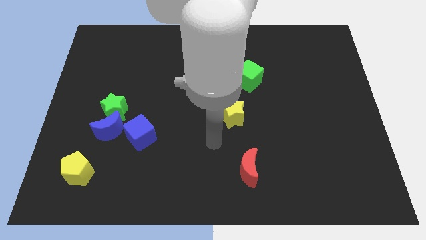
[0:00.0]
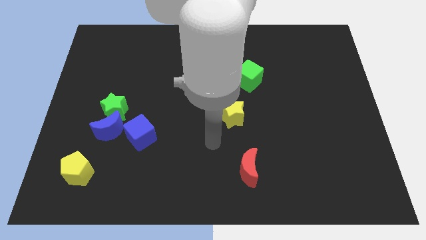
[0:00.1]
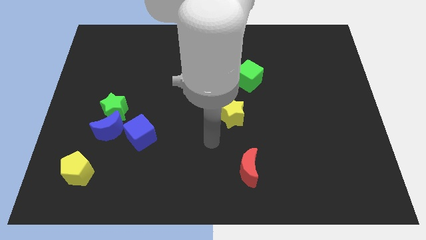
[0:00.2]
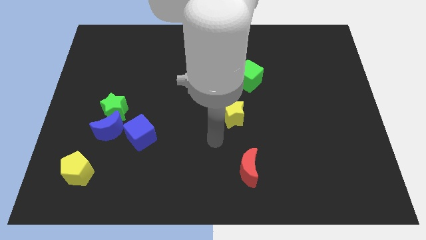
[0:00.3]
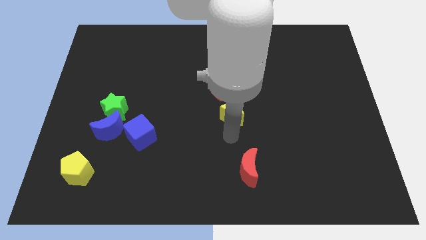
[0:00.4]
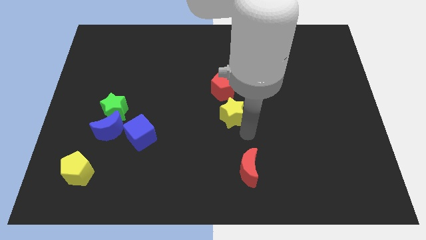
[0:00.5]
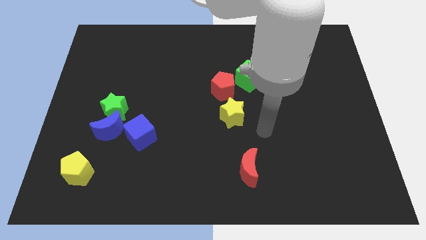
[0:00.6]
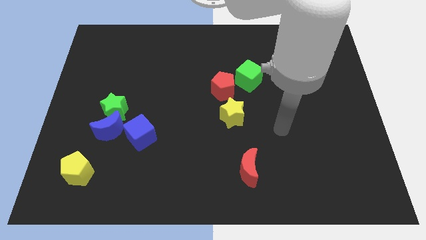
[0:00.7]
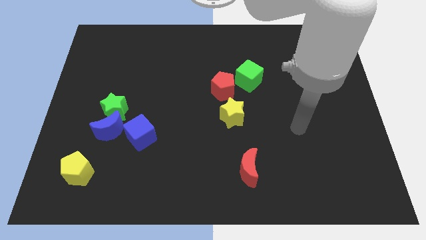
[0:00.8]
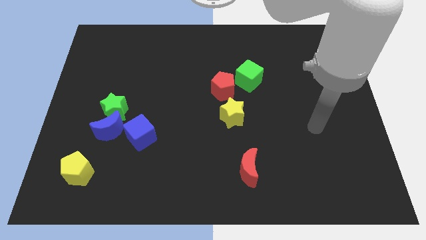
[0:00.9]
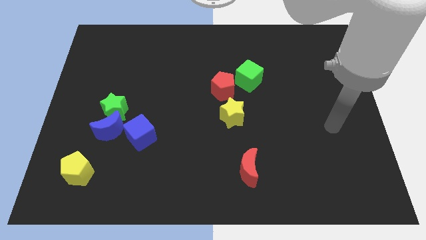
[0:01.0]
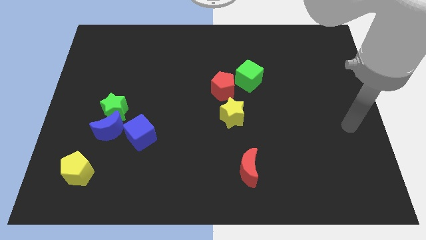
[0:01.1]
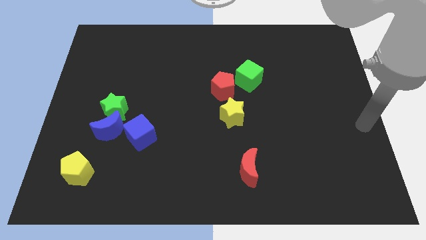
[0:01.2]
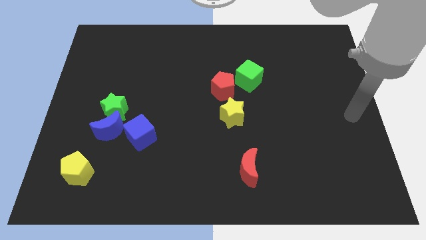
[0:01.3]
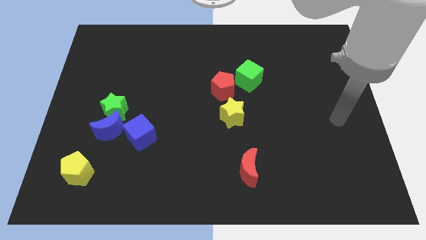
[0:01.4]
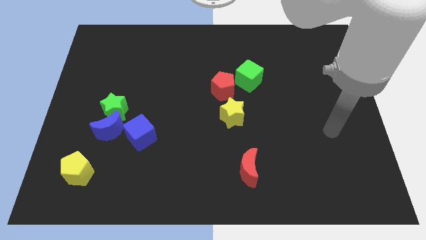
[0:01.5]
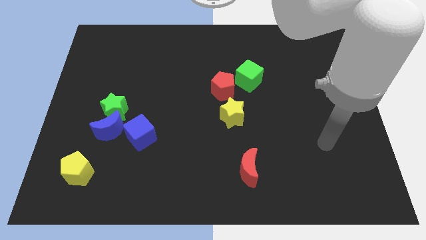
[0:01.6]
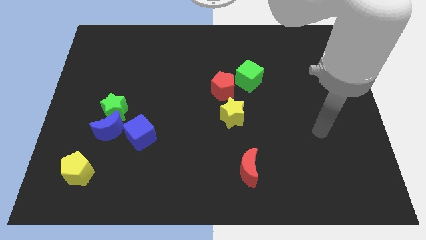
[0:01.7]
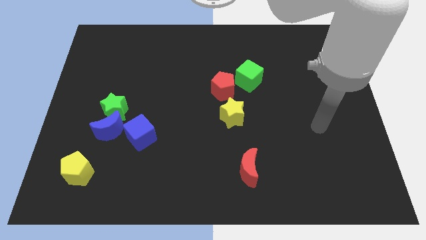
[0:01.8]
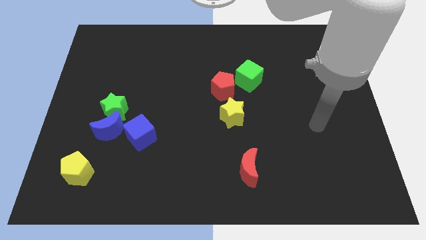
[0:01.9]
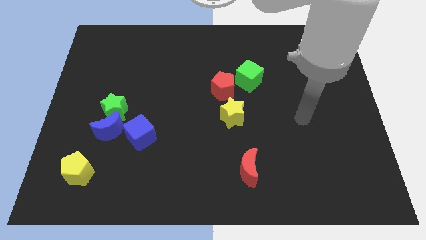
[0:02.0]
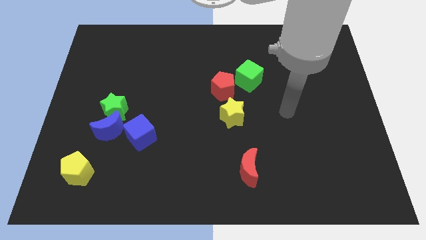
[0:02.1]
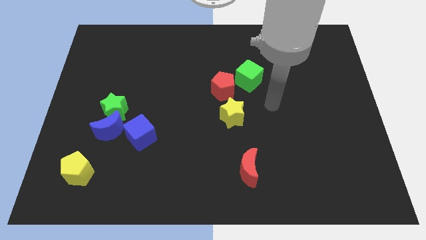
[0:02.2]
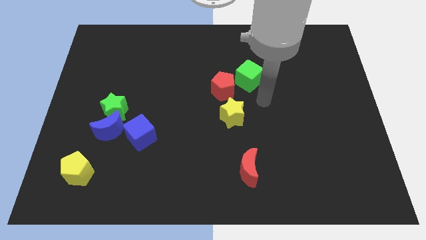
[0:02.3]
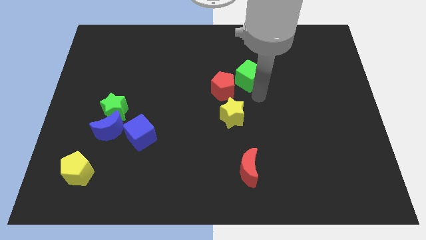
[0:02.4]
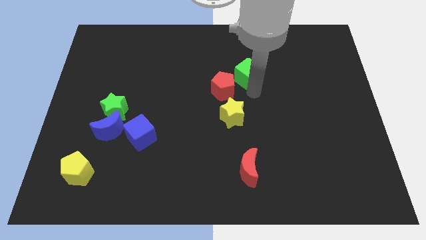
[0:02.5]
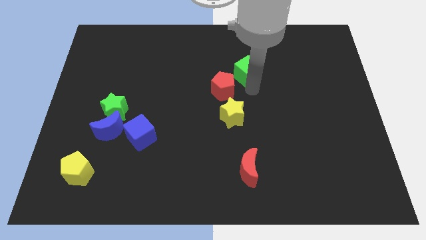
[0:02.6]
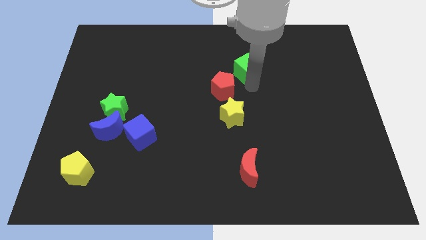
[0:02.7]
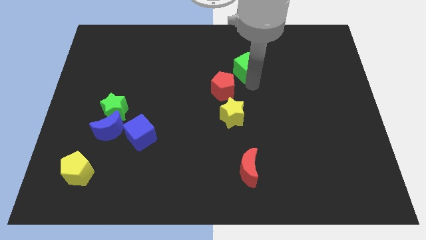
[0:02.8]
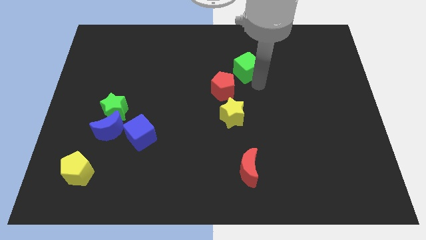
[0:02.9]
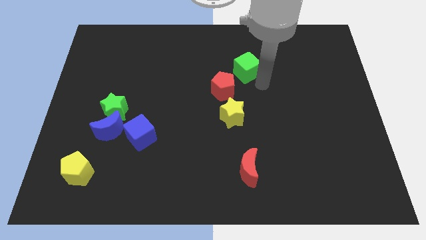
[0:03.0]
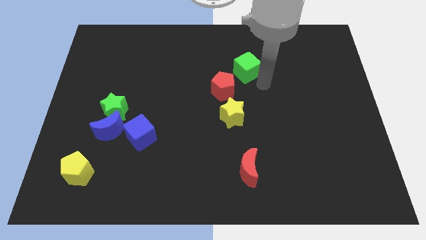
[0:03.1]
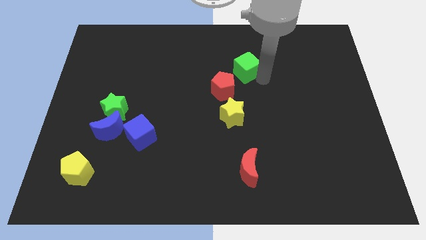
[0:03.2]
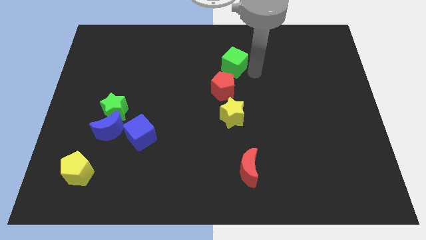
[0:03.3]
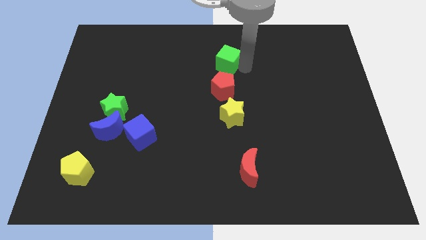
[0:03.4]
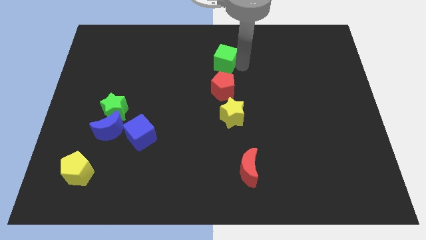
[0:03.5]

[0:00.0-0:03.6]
push green cube above red pentagon

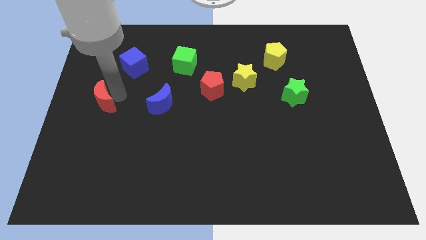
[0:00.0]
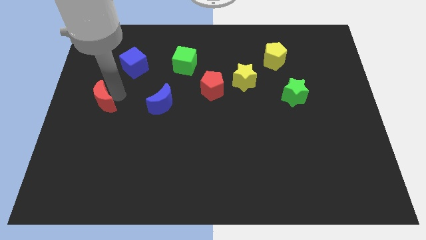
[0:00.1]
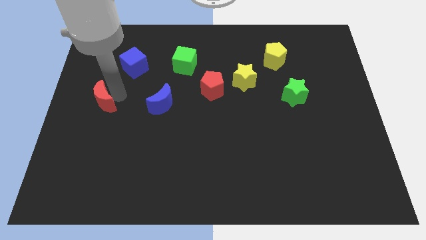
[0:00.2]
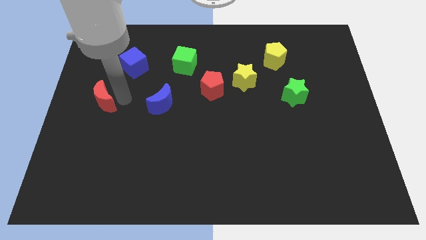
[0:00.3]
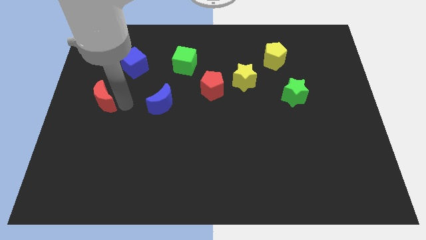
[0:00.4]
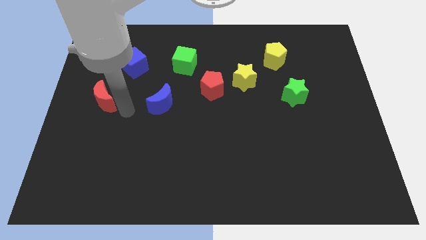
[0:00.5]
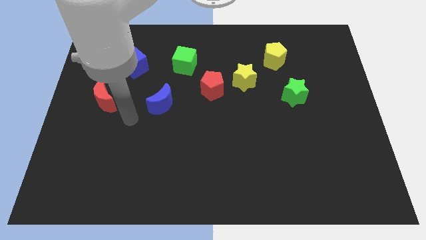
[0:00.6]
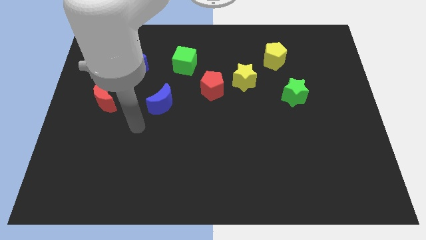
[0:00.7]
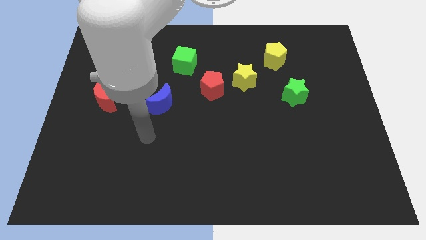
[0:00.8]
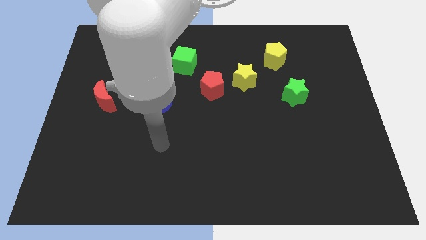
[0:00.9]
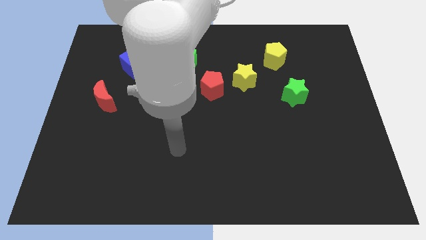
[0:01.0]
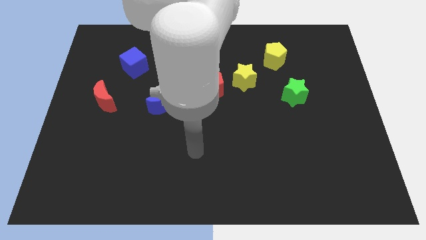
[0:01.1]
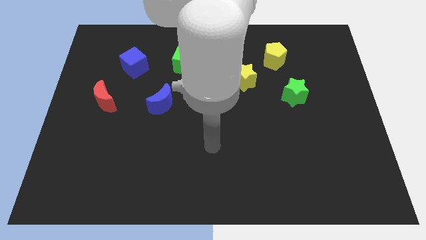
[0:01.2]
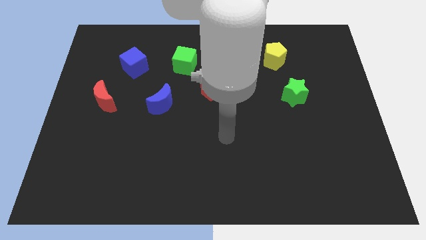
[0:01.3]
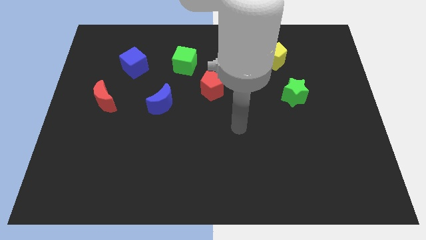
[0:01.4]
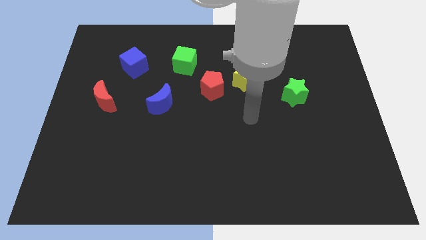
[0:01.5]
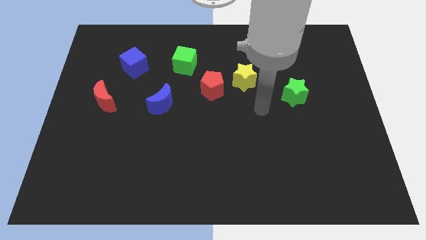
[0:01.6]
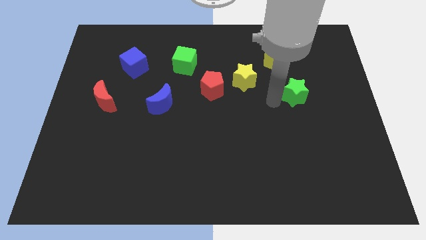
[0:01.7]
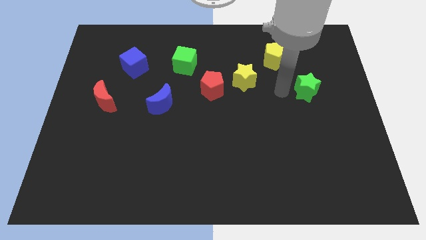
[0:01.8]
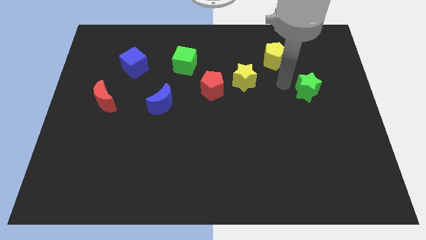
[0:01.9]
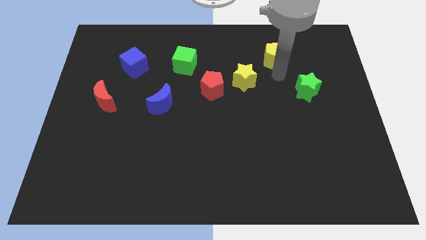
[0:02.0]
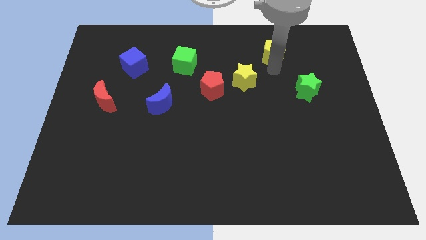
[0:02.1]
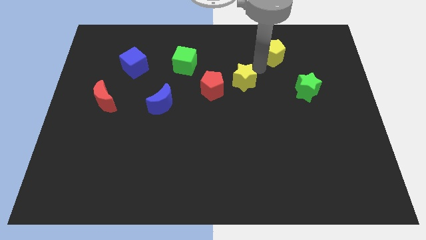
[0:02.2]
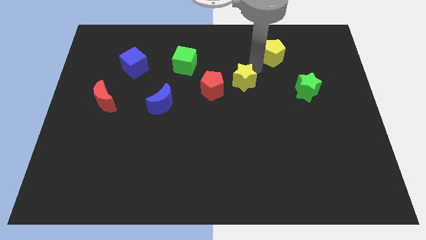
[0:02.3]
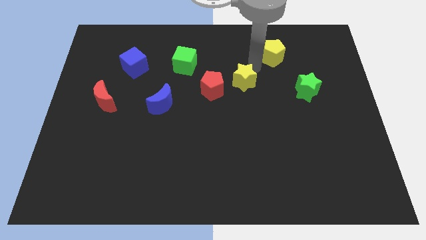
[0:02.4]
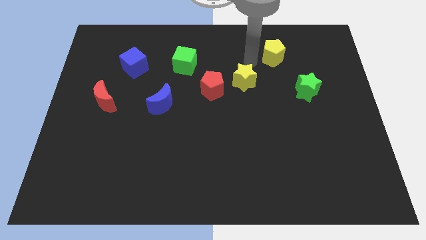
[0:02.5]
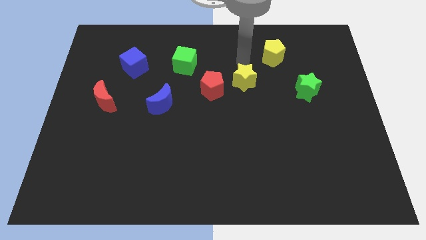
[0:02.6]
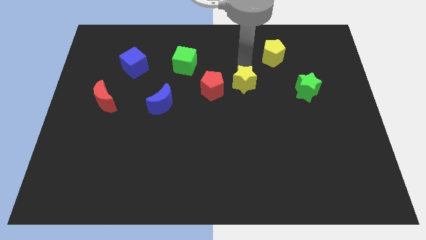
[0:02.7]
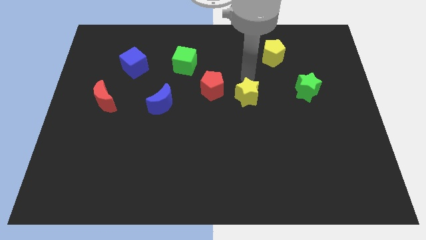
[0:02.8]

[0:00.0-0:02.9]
touch the yellow pentagon slightly

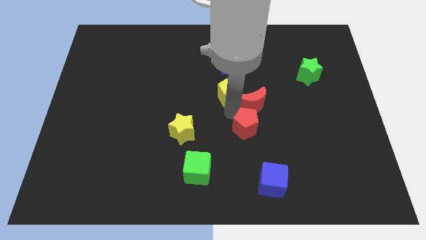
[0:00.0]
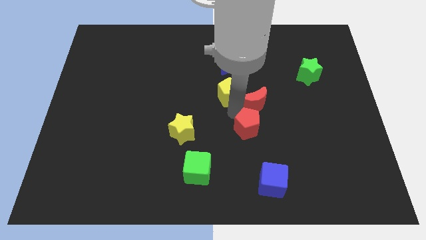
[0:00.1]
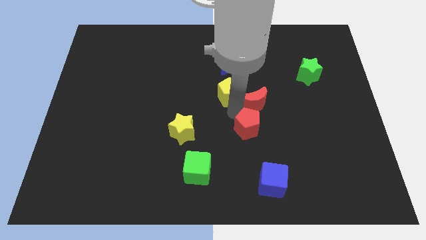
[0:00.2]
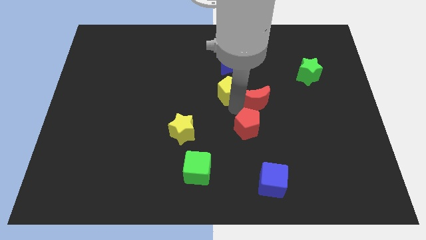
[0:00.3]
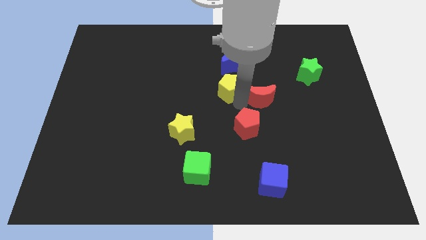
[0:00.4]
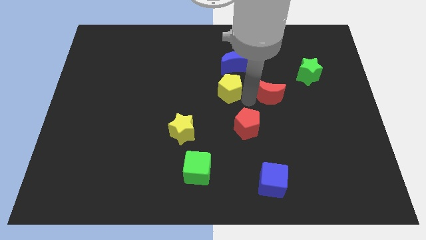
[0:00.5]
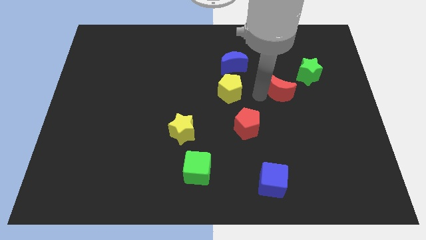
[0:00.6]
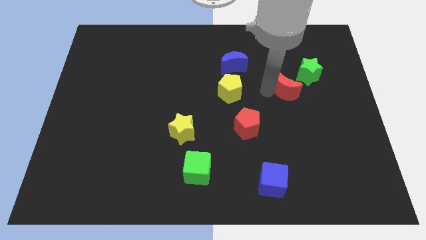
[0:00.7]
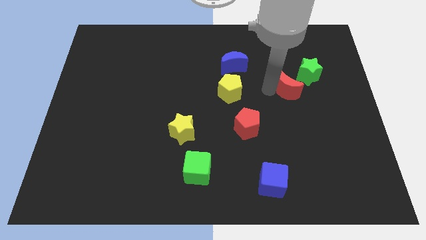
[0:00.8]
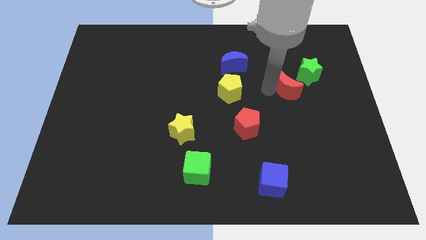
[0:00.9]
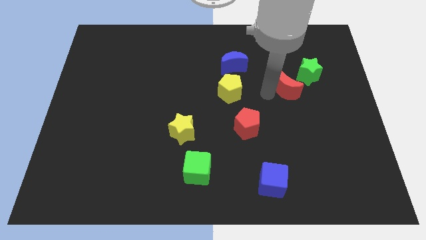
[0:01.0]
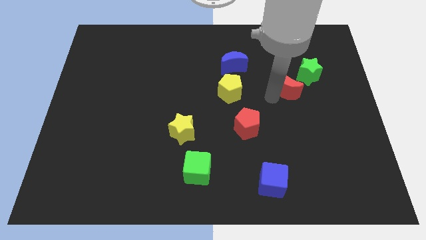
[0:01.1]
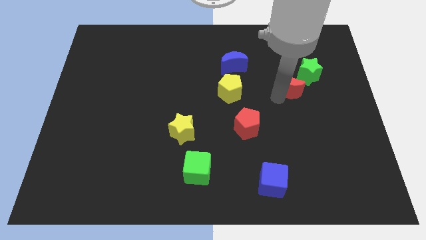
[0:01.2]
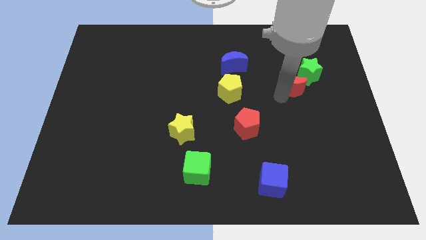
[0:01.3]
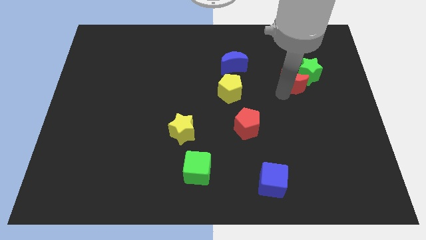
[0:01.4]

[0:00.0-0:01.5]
move red moon towards green star

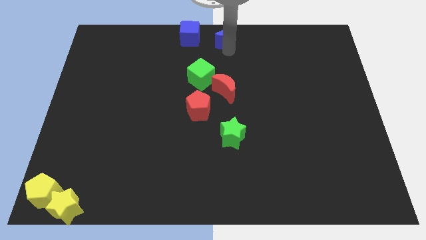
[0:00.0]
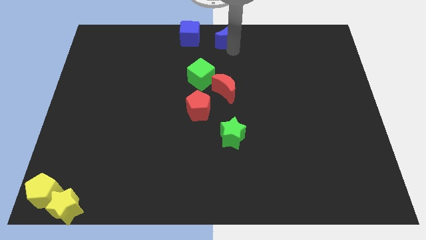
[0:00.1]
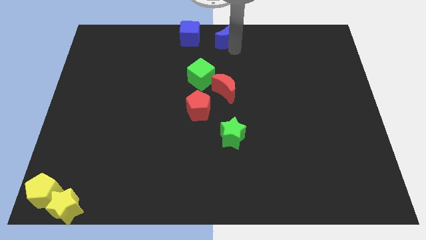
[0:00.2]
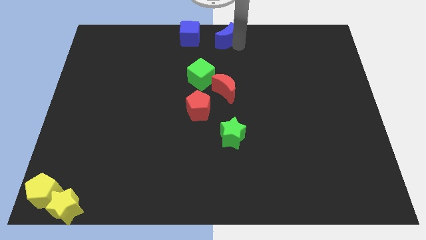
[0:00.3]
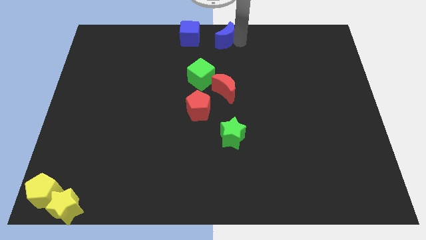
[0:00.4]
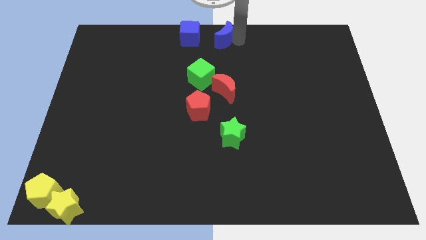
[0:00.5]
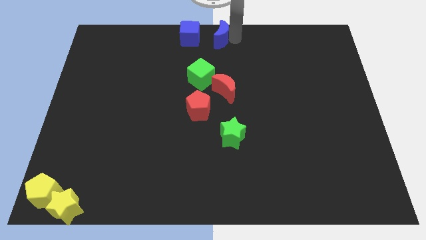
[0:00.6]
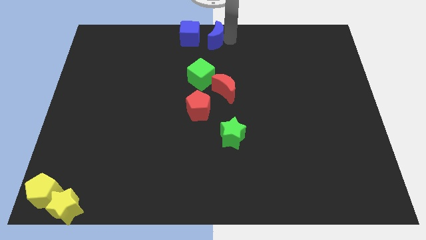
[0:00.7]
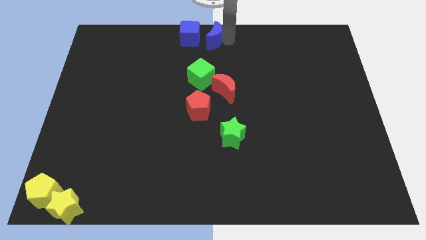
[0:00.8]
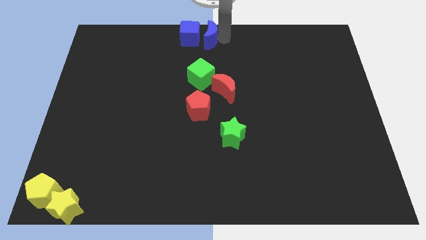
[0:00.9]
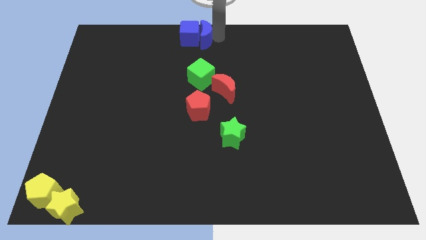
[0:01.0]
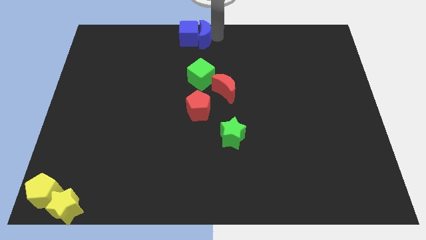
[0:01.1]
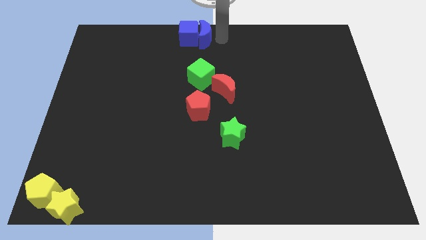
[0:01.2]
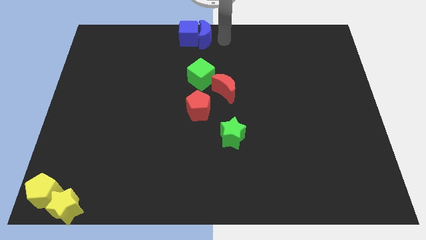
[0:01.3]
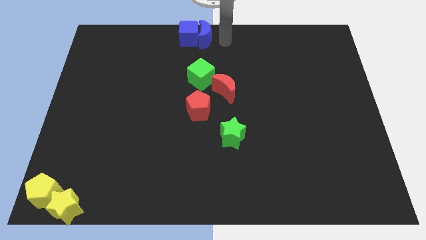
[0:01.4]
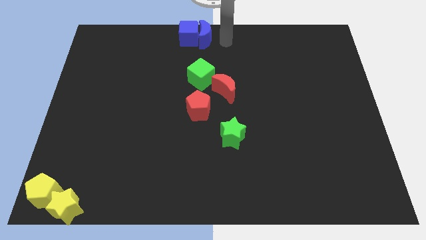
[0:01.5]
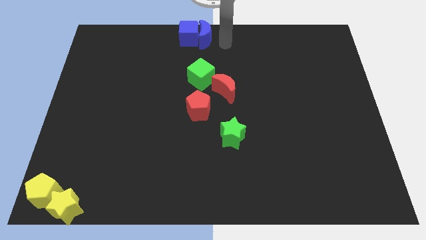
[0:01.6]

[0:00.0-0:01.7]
push the blue crescent into the blue cube
